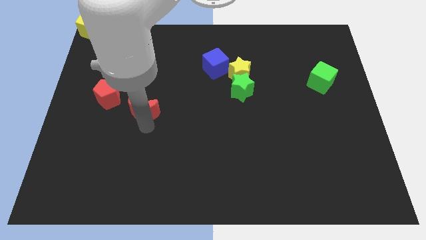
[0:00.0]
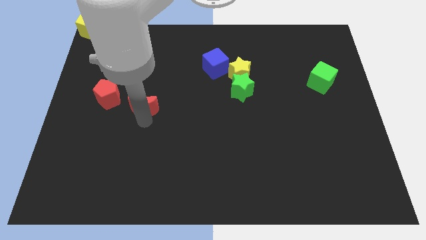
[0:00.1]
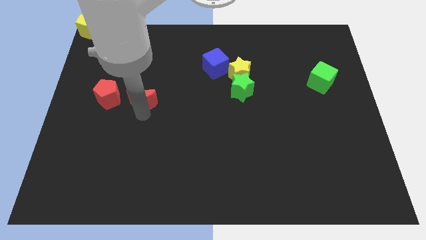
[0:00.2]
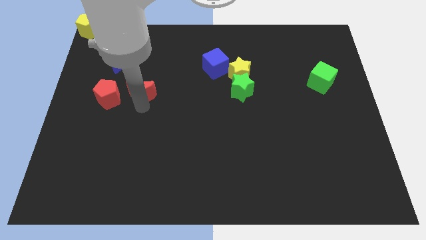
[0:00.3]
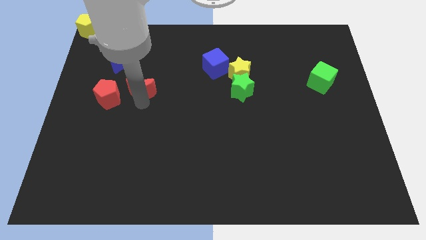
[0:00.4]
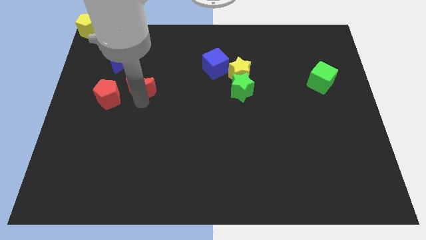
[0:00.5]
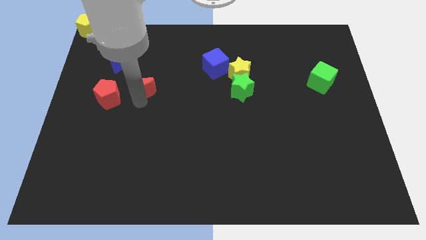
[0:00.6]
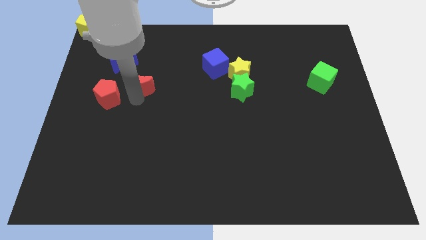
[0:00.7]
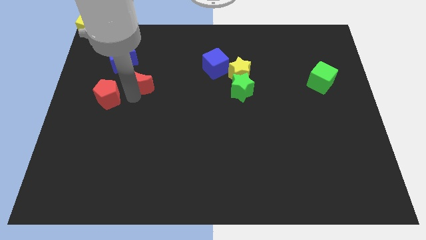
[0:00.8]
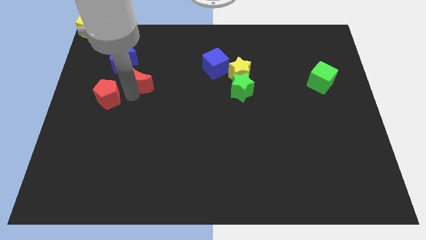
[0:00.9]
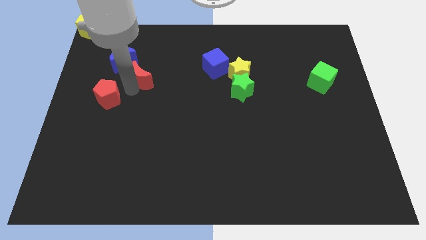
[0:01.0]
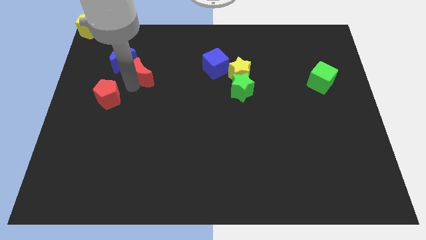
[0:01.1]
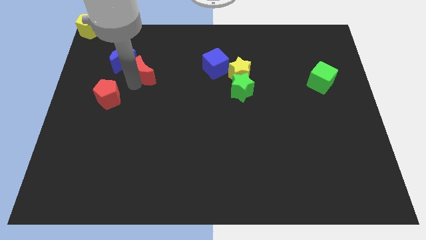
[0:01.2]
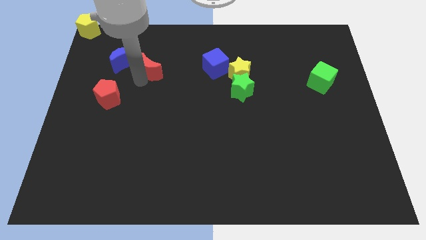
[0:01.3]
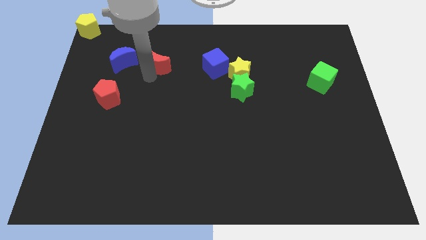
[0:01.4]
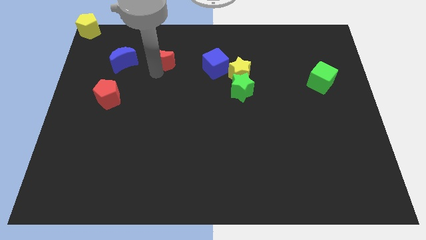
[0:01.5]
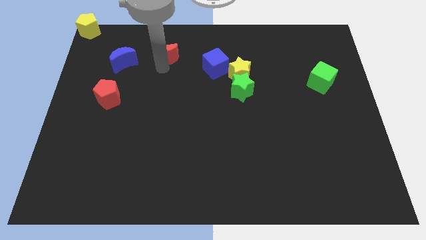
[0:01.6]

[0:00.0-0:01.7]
place red moon to the right of blue moon

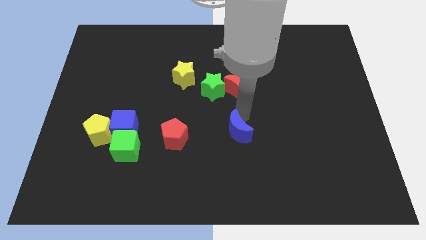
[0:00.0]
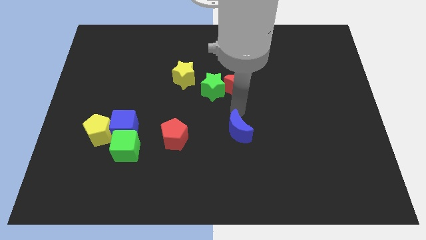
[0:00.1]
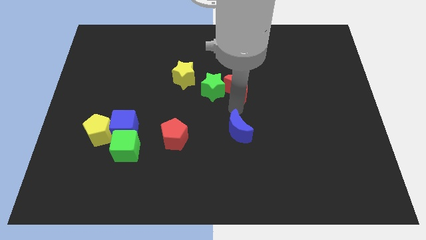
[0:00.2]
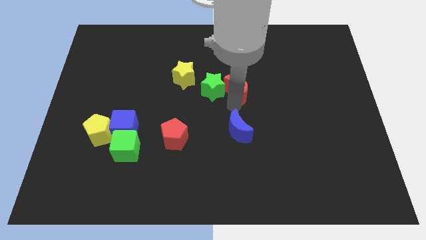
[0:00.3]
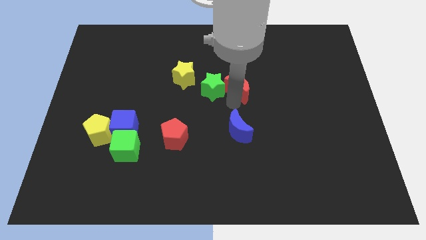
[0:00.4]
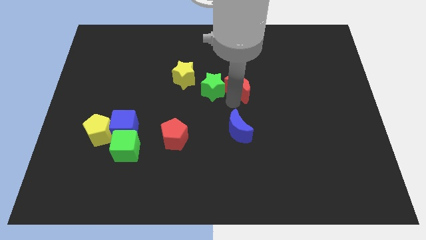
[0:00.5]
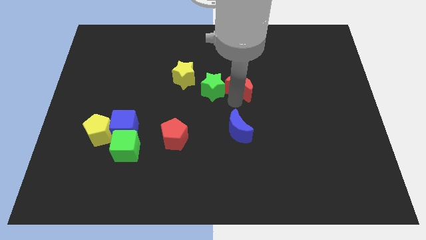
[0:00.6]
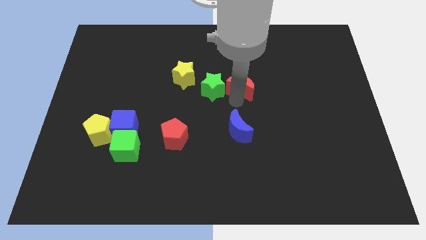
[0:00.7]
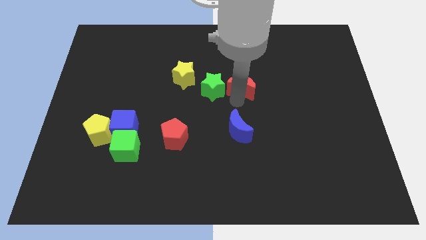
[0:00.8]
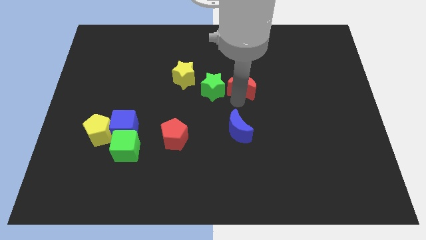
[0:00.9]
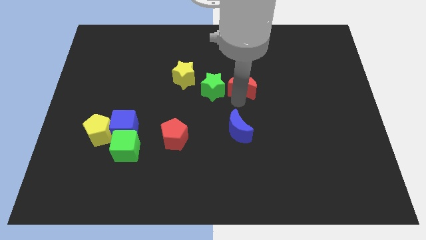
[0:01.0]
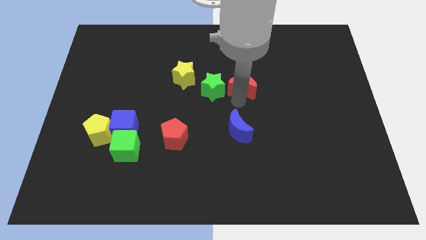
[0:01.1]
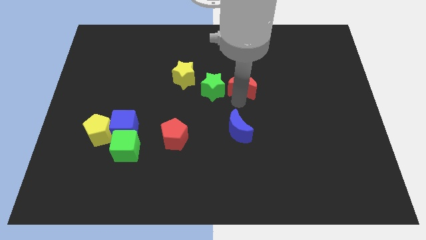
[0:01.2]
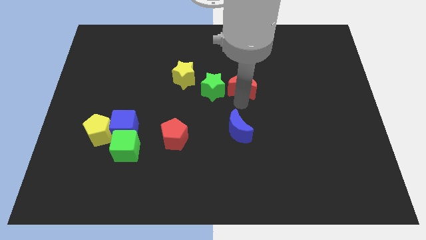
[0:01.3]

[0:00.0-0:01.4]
move the red moon slightly away from the green star

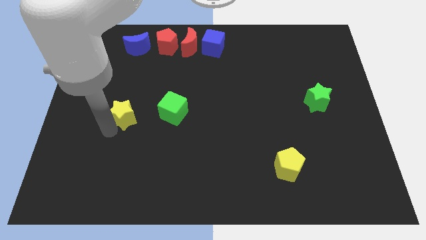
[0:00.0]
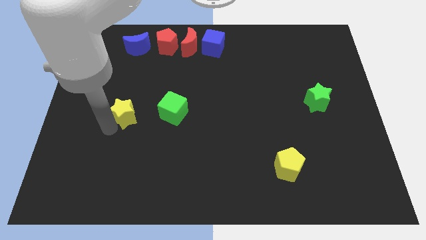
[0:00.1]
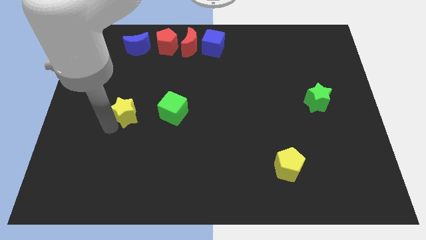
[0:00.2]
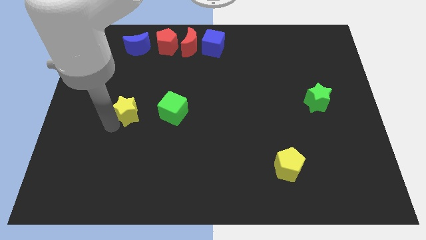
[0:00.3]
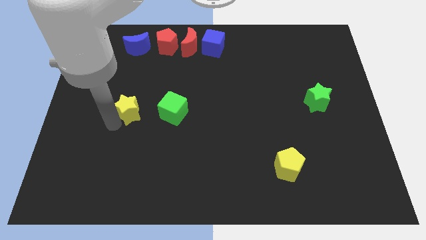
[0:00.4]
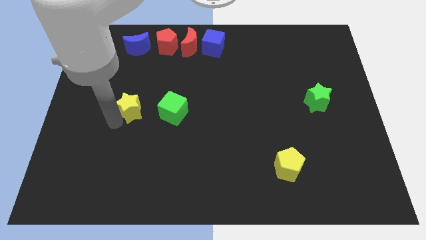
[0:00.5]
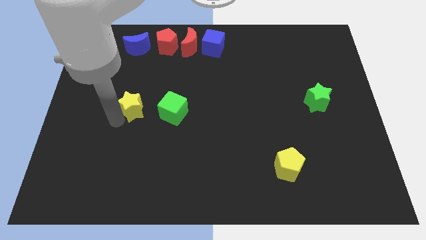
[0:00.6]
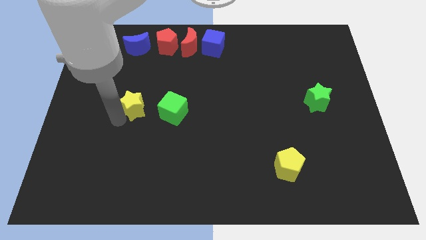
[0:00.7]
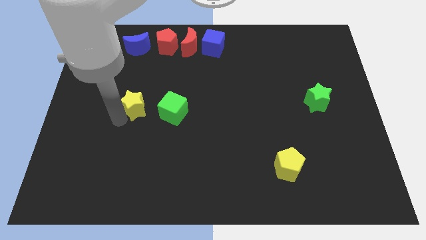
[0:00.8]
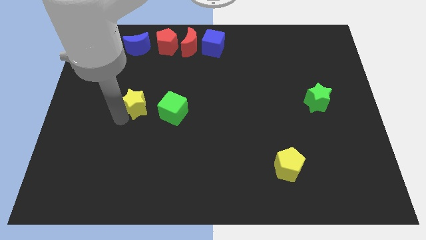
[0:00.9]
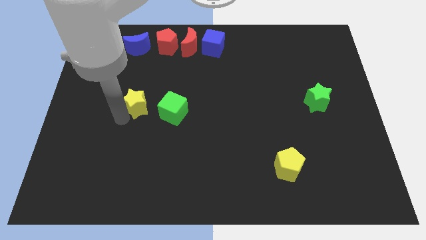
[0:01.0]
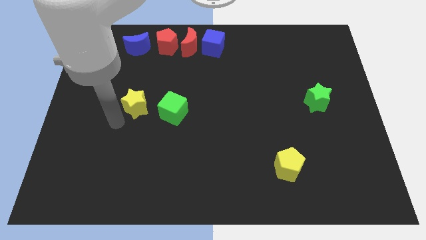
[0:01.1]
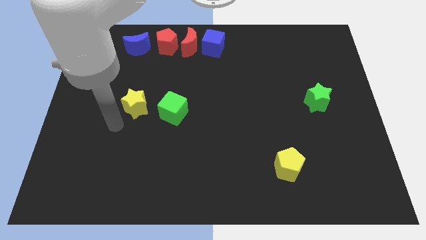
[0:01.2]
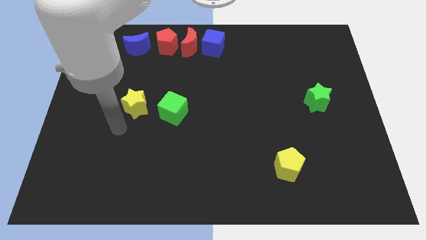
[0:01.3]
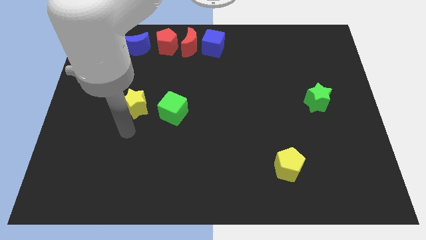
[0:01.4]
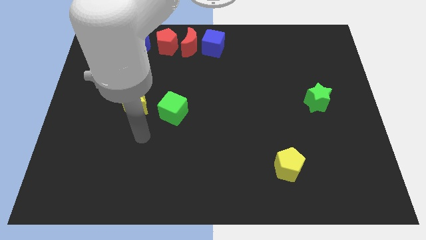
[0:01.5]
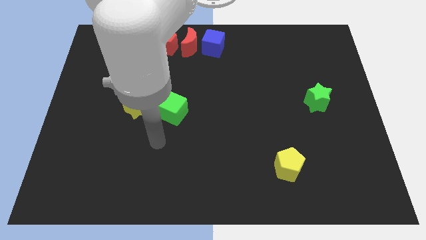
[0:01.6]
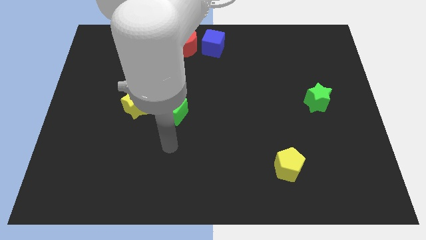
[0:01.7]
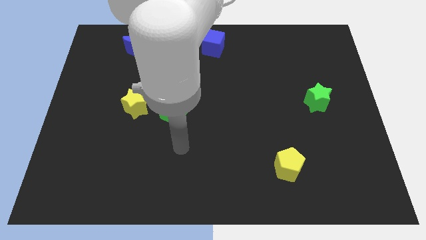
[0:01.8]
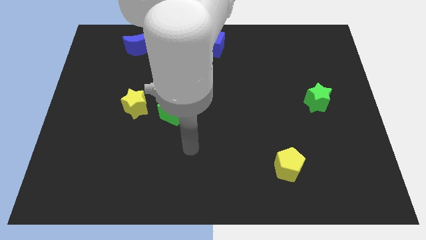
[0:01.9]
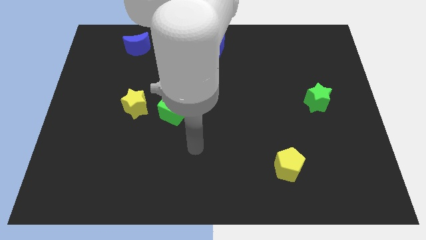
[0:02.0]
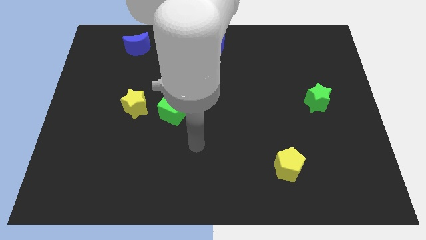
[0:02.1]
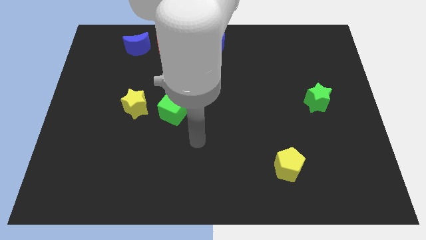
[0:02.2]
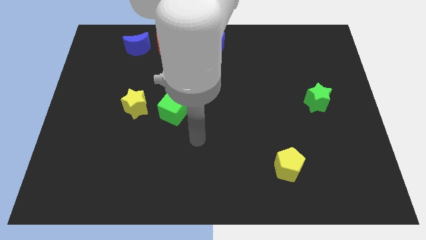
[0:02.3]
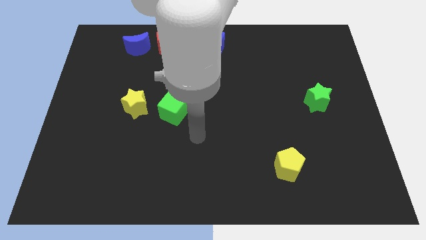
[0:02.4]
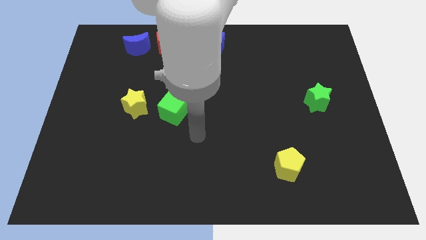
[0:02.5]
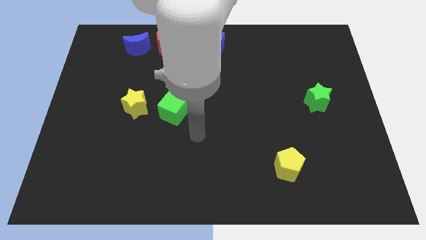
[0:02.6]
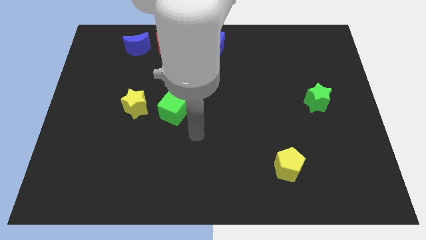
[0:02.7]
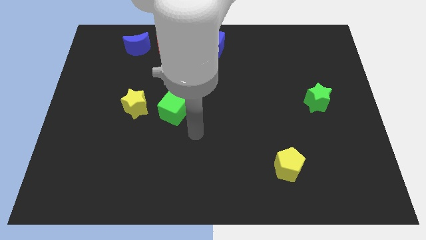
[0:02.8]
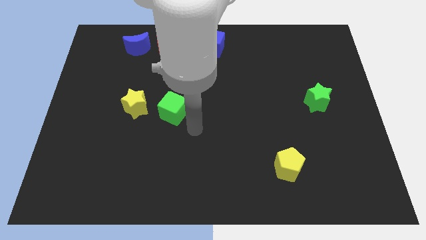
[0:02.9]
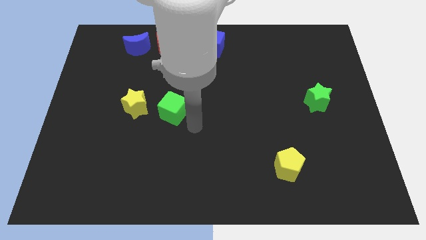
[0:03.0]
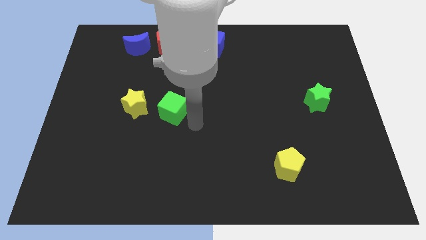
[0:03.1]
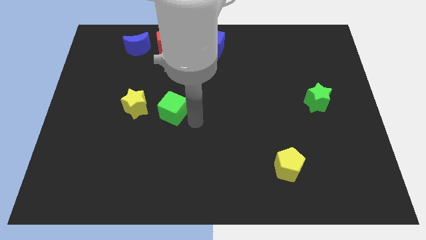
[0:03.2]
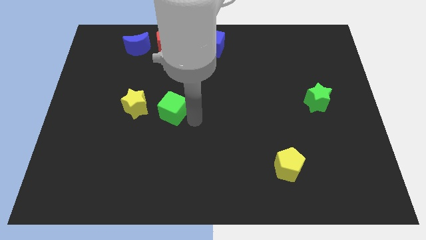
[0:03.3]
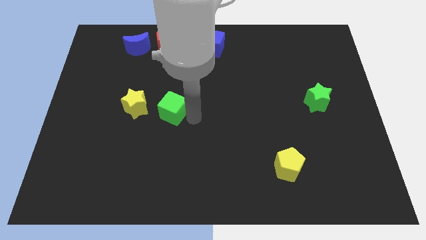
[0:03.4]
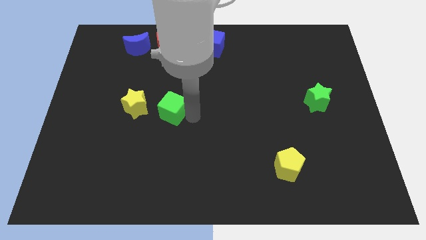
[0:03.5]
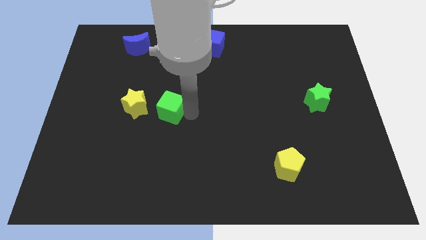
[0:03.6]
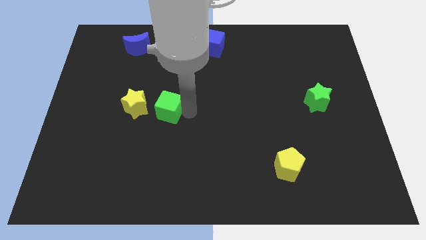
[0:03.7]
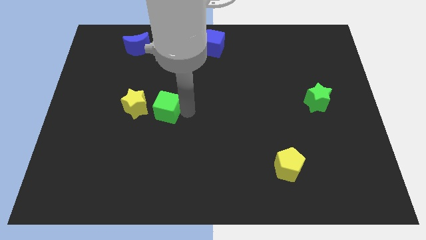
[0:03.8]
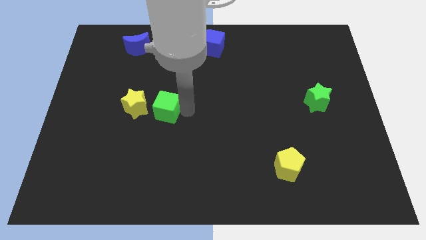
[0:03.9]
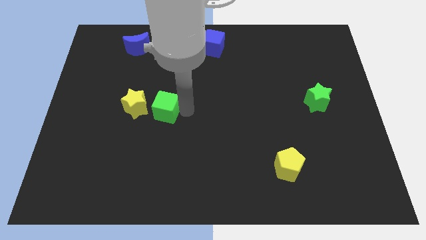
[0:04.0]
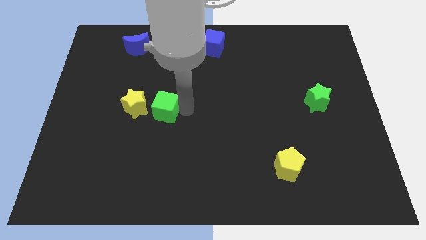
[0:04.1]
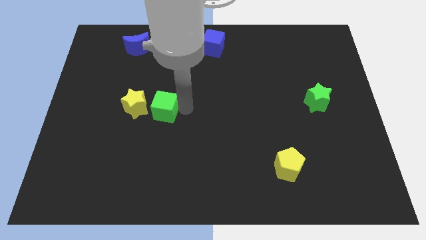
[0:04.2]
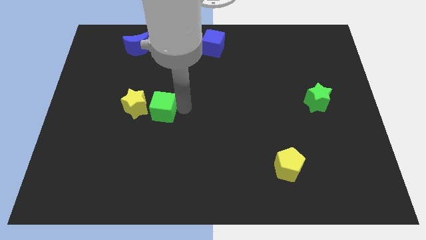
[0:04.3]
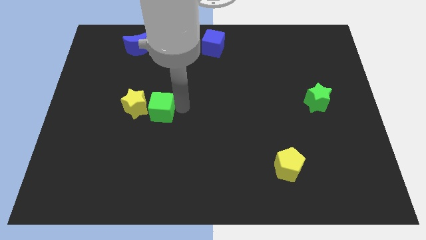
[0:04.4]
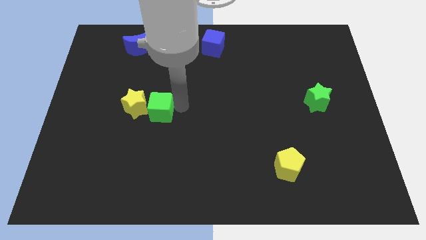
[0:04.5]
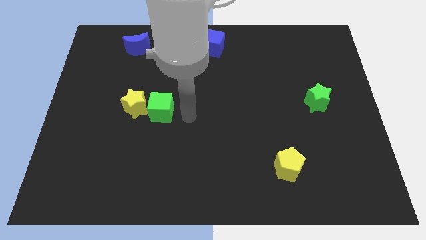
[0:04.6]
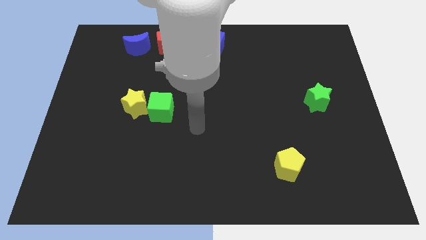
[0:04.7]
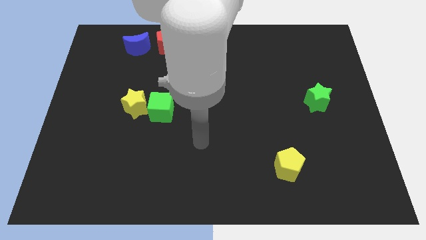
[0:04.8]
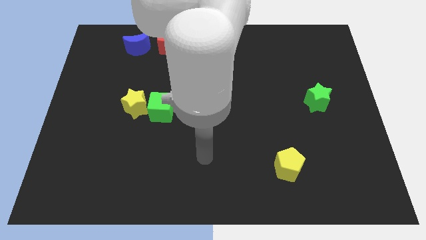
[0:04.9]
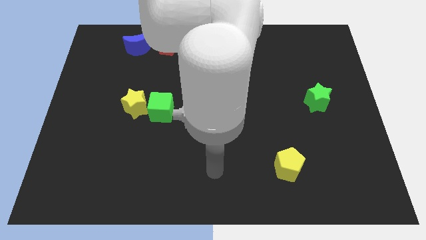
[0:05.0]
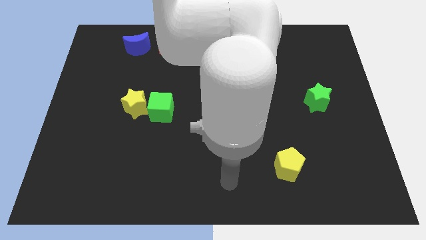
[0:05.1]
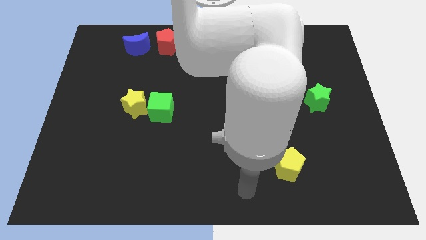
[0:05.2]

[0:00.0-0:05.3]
push yellow star and green cube together

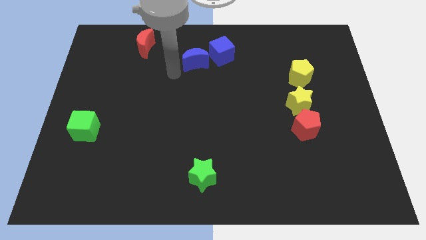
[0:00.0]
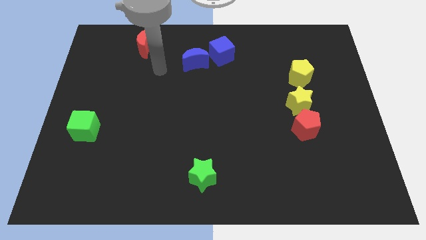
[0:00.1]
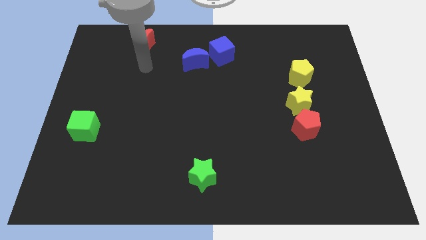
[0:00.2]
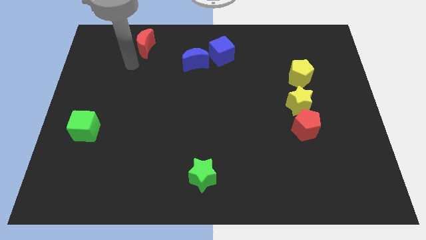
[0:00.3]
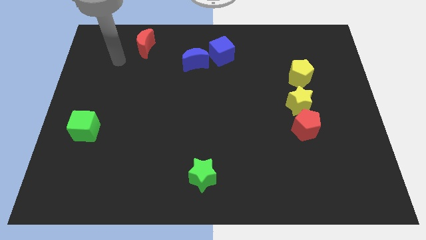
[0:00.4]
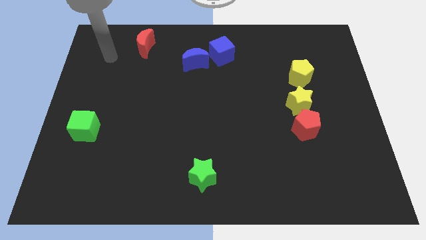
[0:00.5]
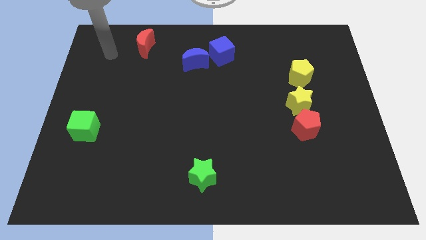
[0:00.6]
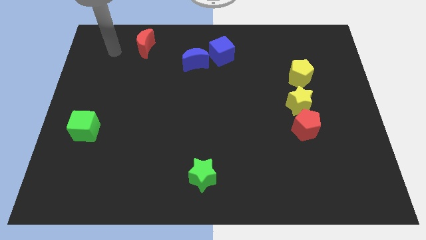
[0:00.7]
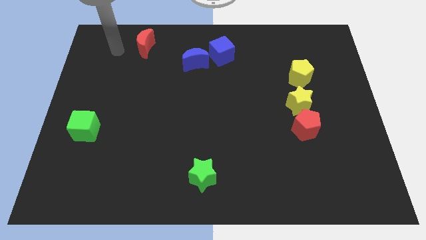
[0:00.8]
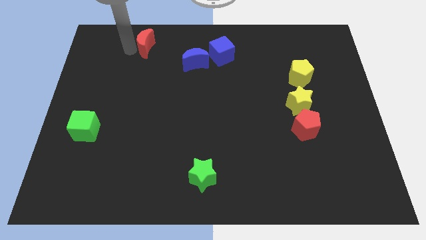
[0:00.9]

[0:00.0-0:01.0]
move your arm to the left of the red moon
